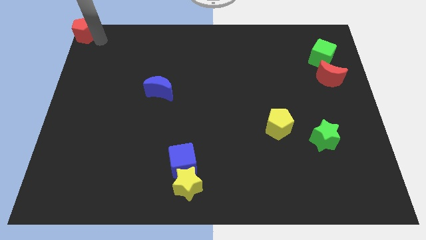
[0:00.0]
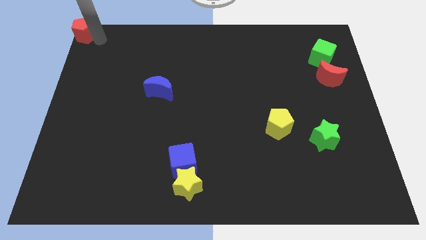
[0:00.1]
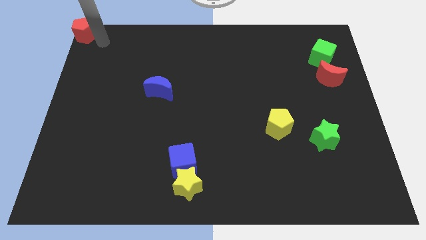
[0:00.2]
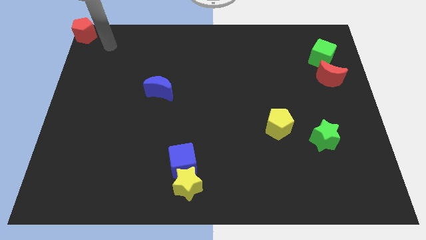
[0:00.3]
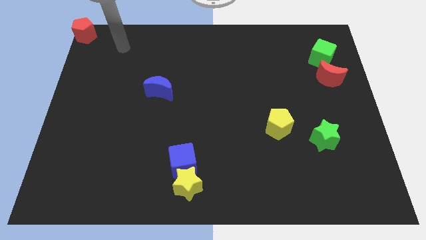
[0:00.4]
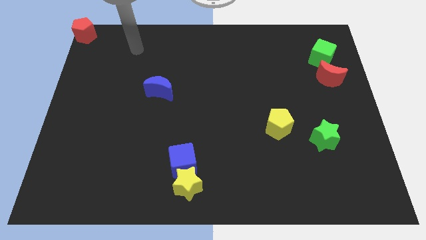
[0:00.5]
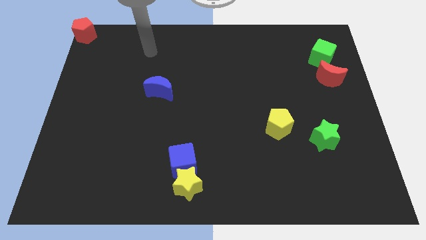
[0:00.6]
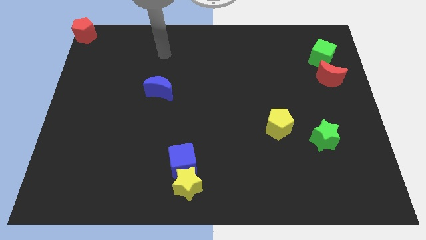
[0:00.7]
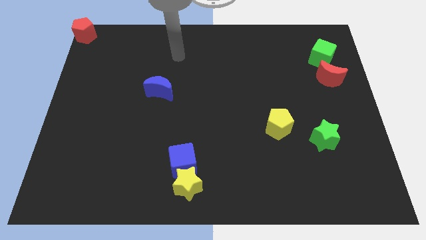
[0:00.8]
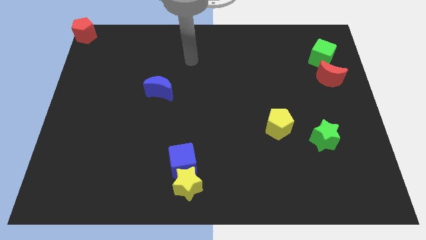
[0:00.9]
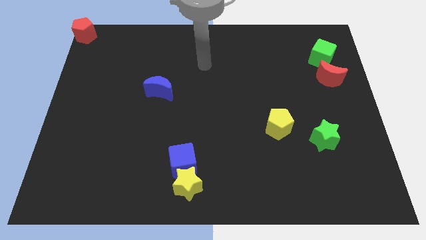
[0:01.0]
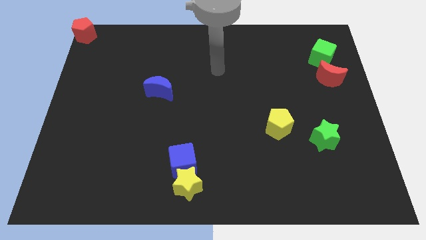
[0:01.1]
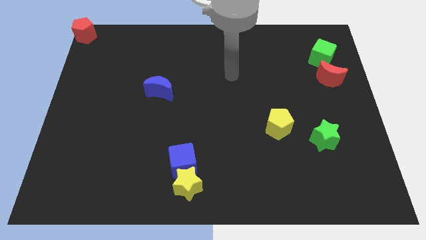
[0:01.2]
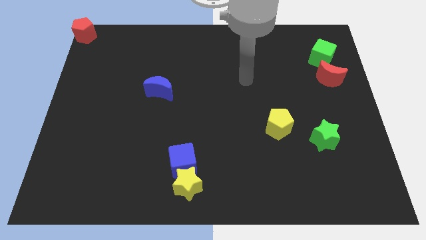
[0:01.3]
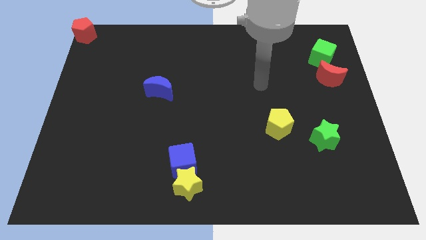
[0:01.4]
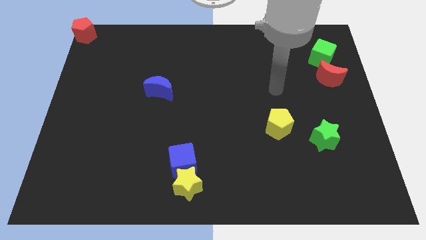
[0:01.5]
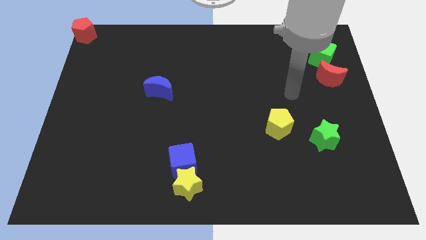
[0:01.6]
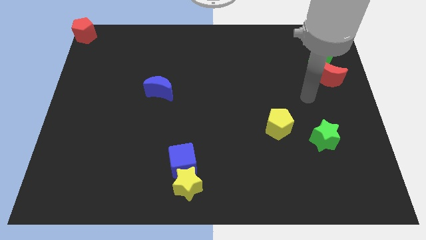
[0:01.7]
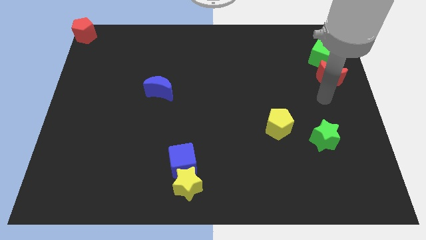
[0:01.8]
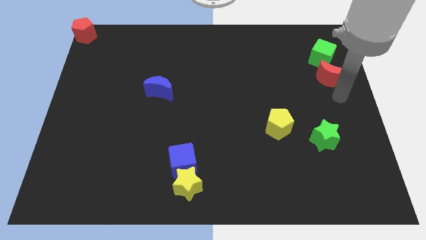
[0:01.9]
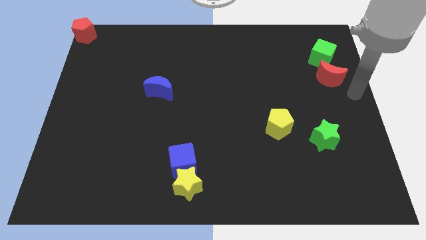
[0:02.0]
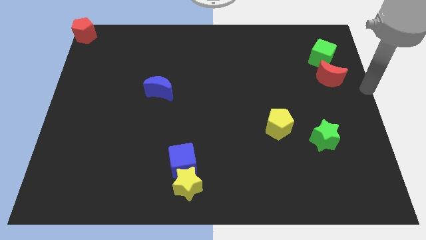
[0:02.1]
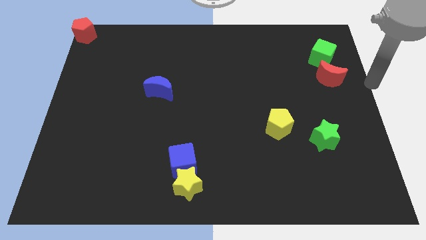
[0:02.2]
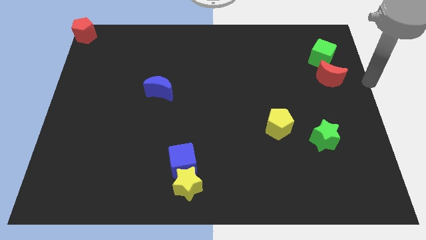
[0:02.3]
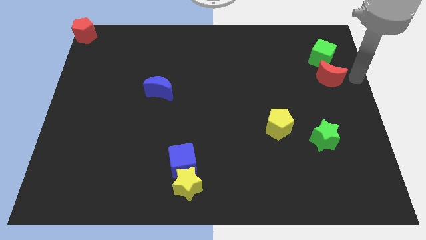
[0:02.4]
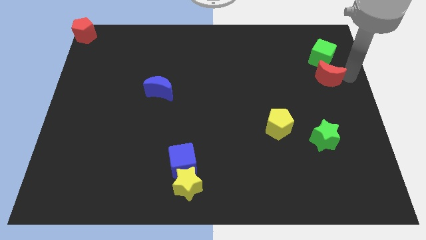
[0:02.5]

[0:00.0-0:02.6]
move your arm away from the red pentagon

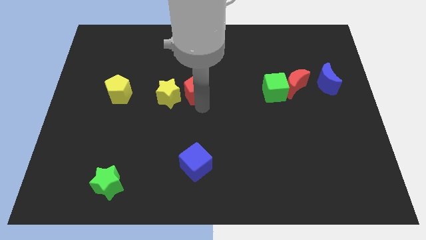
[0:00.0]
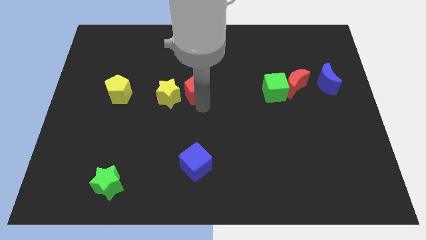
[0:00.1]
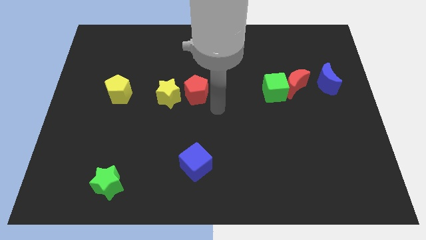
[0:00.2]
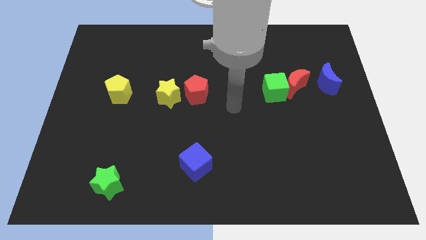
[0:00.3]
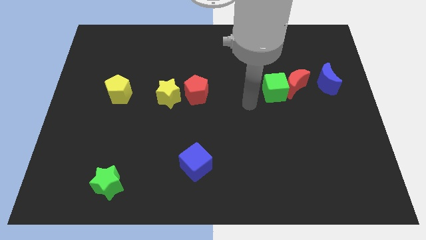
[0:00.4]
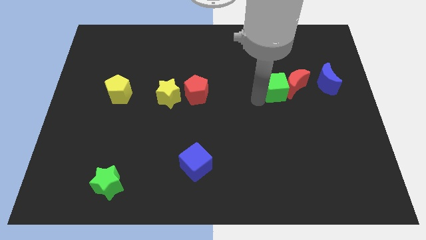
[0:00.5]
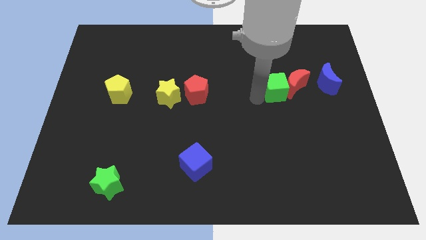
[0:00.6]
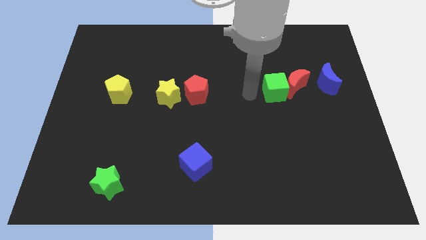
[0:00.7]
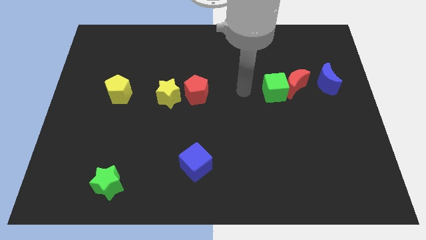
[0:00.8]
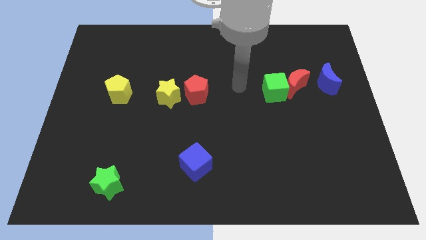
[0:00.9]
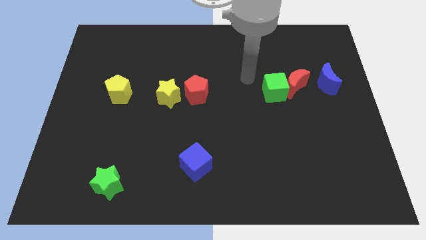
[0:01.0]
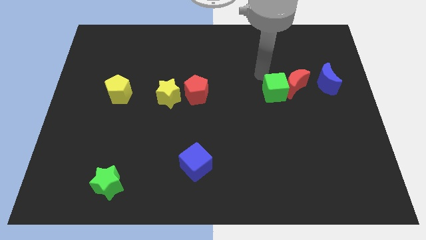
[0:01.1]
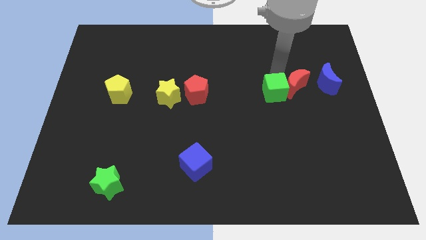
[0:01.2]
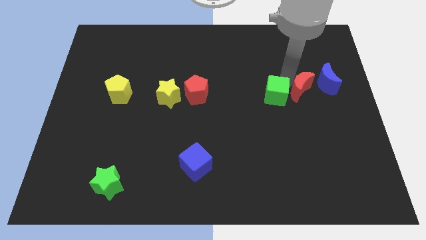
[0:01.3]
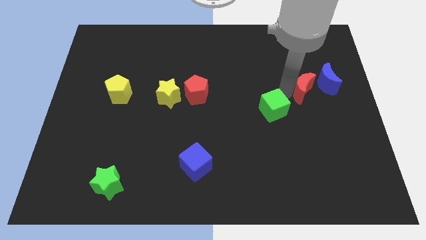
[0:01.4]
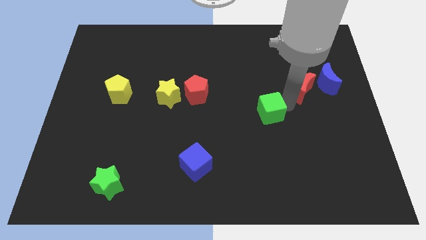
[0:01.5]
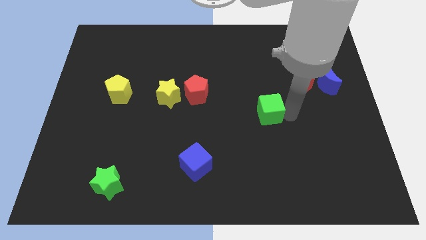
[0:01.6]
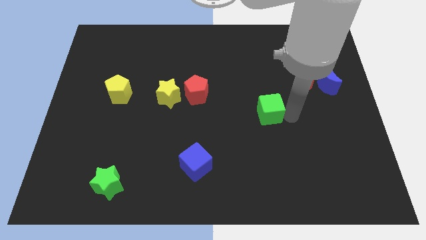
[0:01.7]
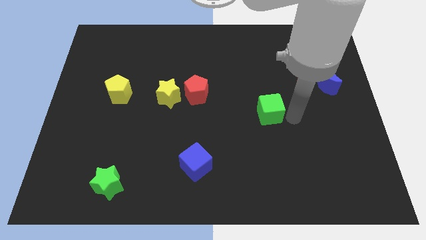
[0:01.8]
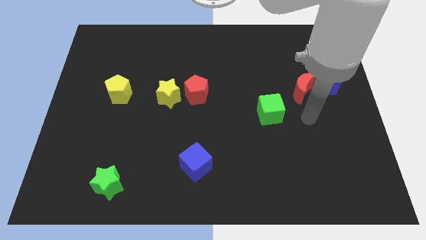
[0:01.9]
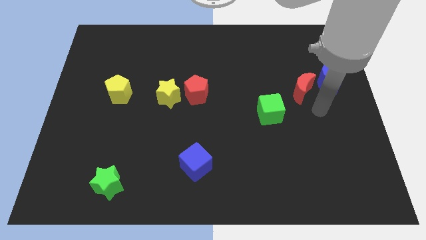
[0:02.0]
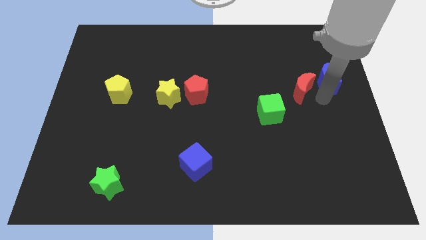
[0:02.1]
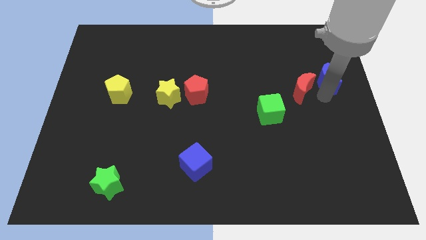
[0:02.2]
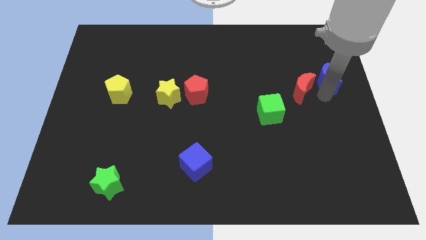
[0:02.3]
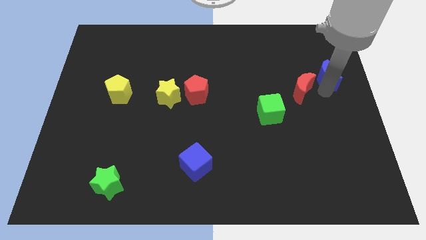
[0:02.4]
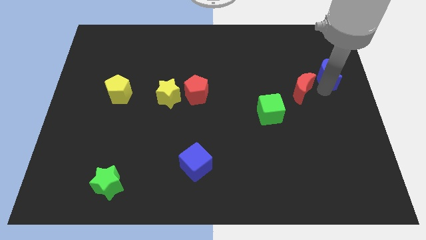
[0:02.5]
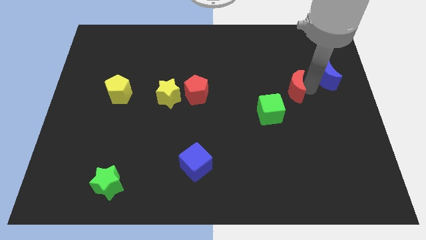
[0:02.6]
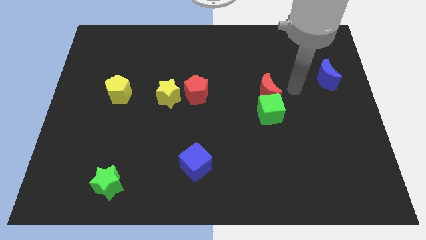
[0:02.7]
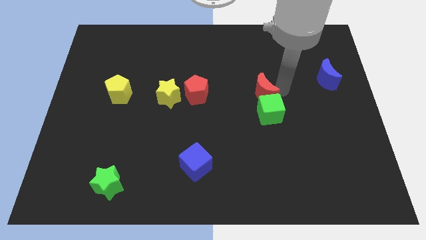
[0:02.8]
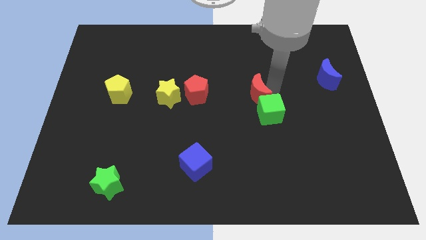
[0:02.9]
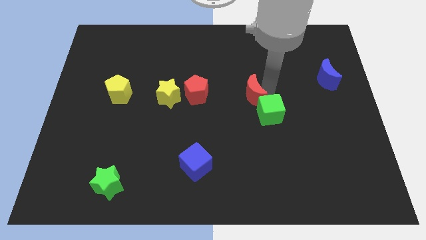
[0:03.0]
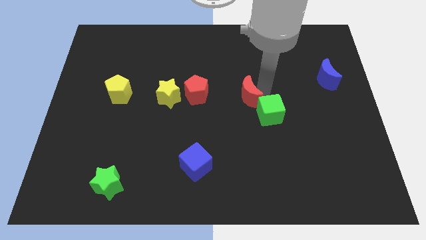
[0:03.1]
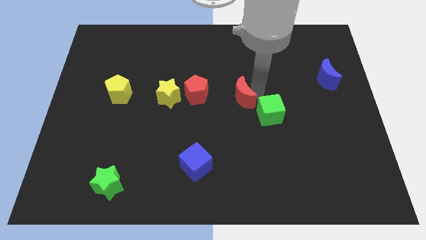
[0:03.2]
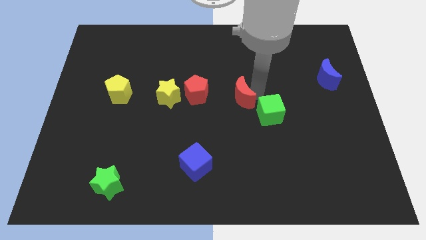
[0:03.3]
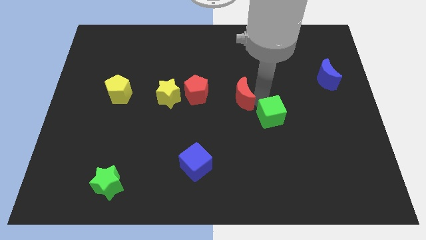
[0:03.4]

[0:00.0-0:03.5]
place the red moon right to the red pentagon

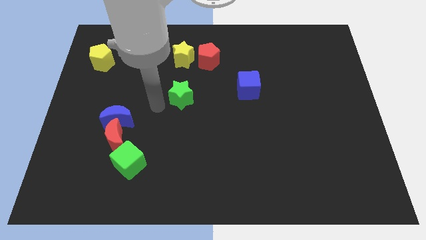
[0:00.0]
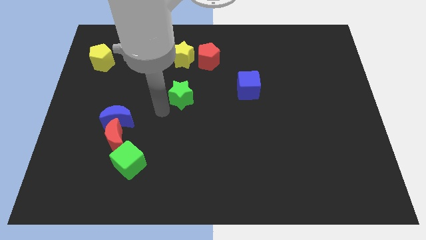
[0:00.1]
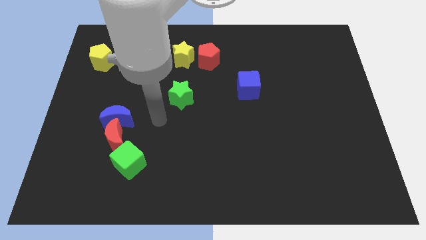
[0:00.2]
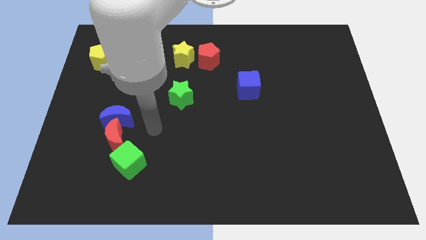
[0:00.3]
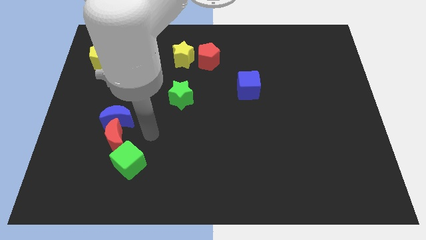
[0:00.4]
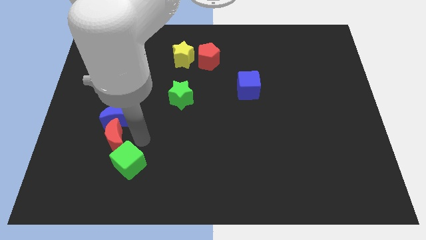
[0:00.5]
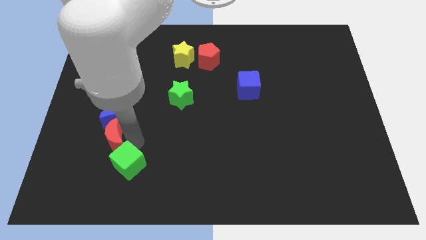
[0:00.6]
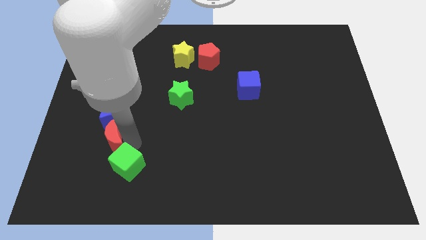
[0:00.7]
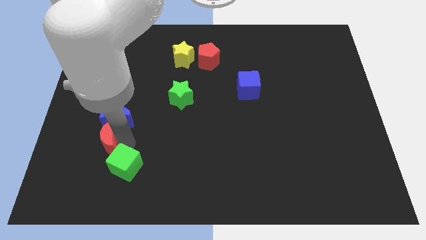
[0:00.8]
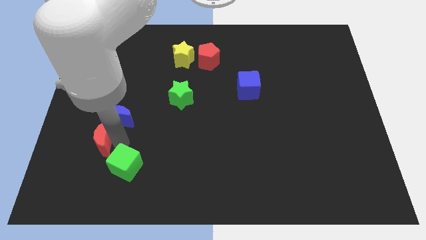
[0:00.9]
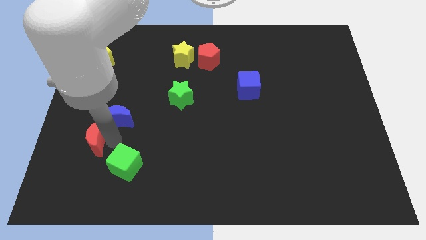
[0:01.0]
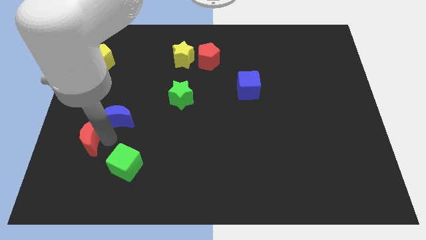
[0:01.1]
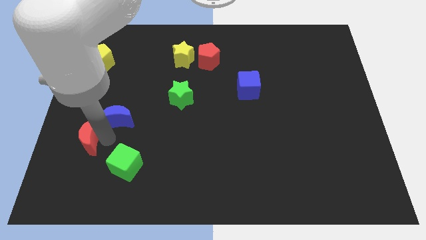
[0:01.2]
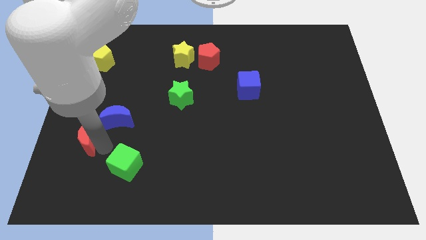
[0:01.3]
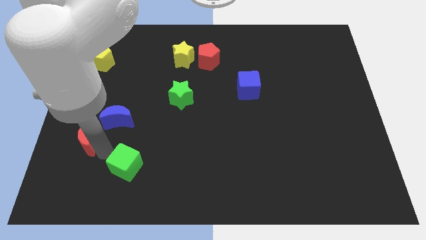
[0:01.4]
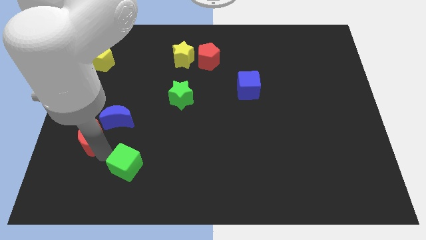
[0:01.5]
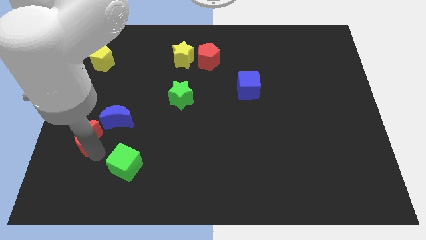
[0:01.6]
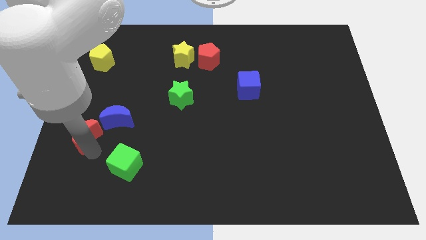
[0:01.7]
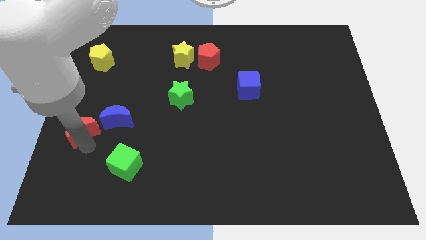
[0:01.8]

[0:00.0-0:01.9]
separate the green cube from red moon

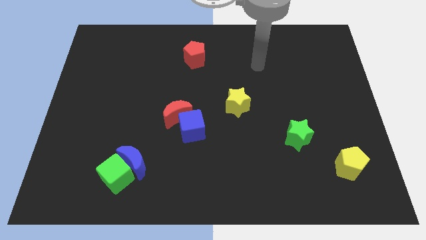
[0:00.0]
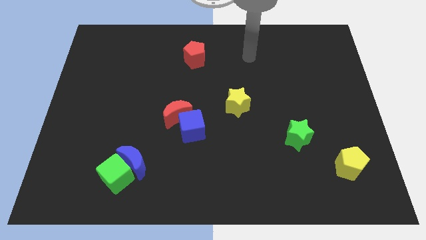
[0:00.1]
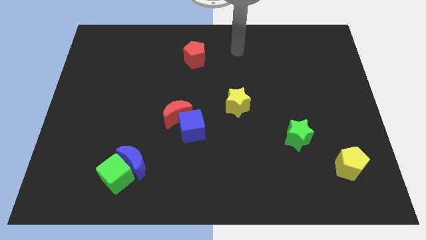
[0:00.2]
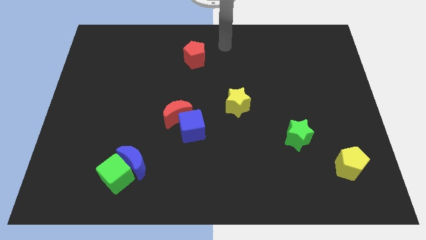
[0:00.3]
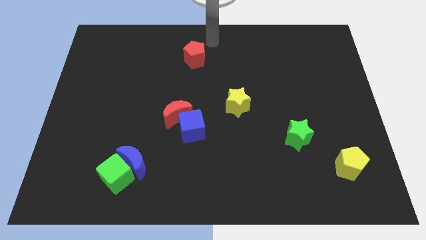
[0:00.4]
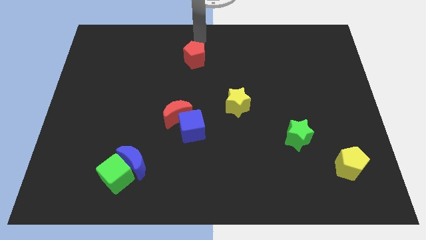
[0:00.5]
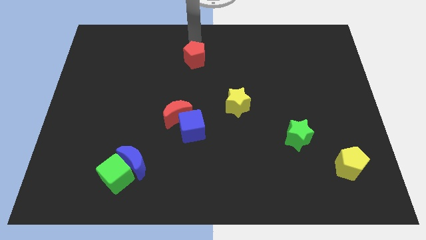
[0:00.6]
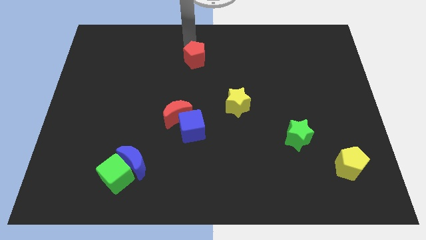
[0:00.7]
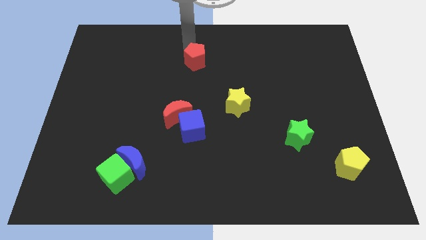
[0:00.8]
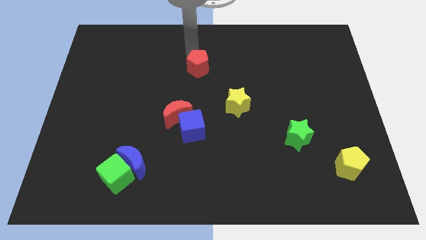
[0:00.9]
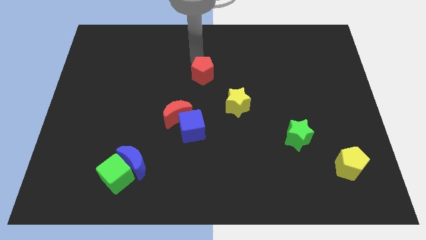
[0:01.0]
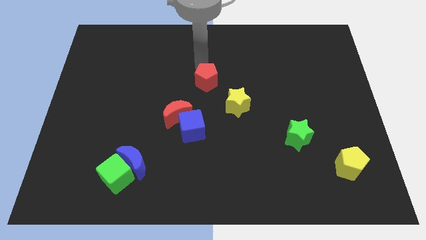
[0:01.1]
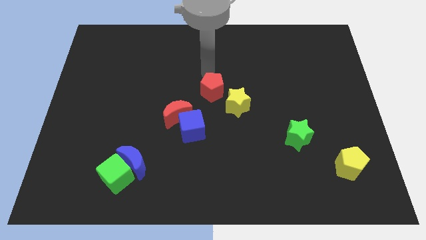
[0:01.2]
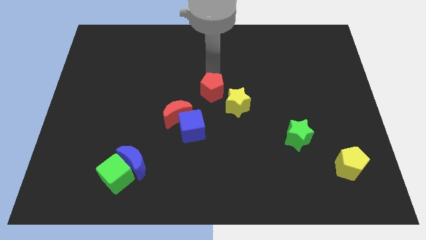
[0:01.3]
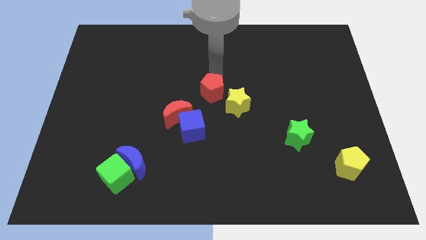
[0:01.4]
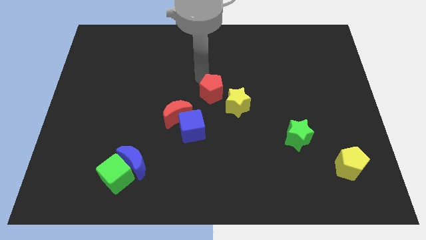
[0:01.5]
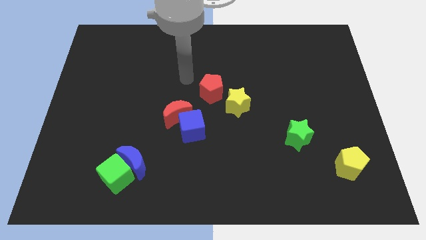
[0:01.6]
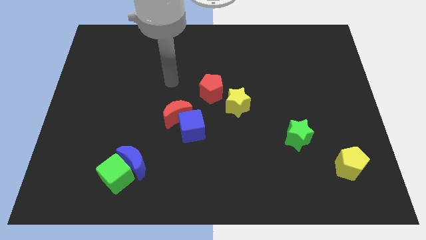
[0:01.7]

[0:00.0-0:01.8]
move the red pentagon close to the yellow star
